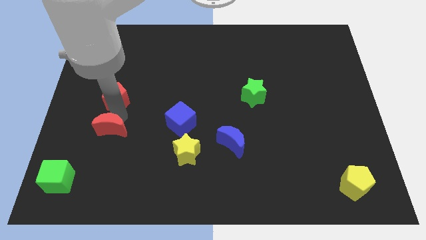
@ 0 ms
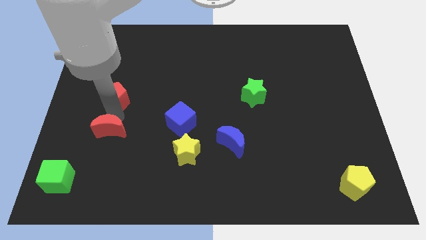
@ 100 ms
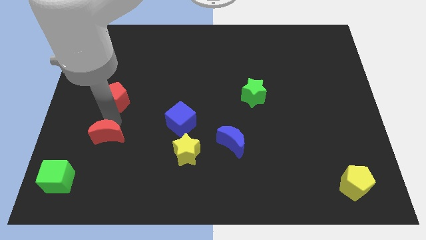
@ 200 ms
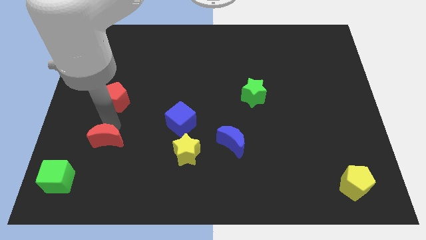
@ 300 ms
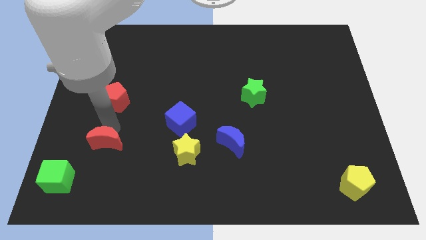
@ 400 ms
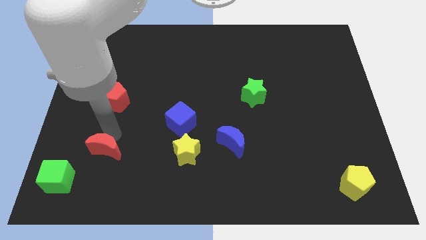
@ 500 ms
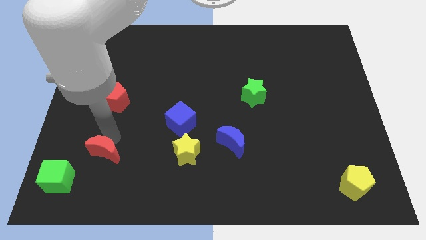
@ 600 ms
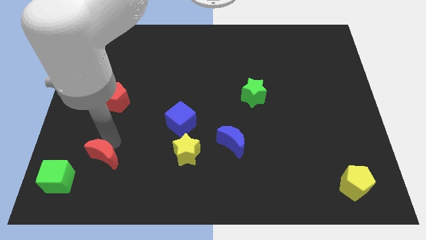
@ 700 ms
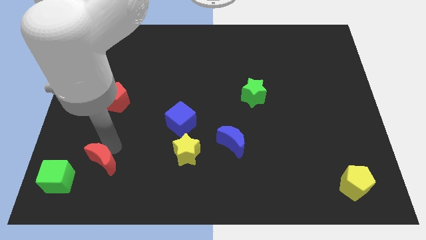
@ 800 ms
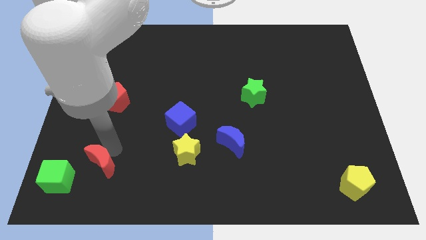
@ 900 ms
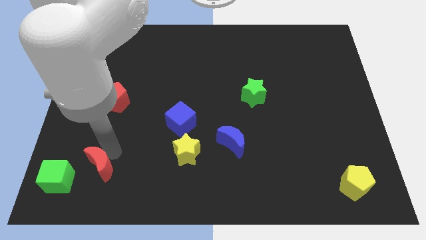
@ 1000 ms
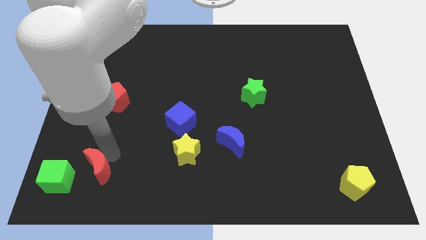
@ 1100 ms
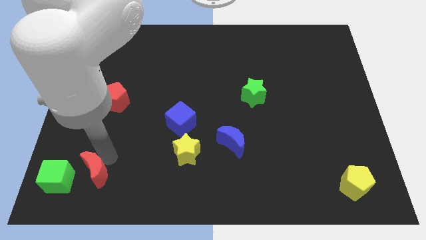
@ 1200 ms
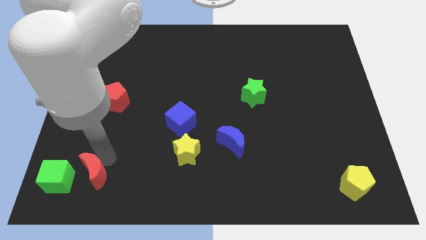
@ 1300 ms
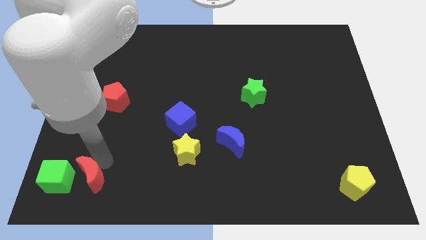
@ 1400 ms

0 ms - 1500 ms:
place red moon to the right of green cube

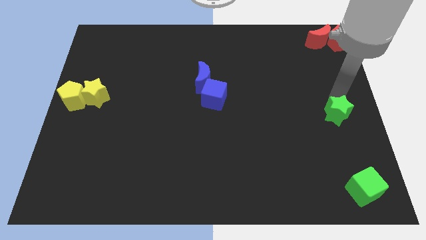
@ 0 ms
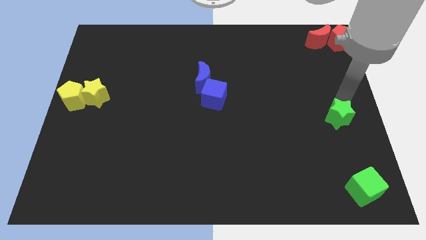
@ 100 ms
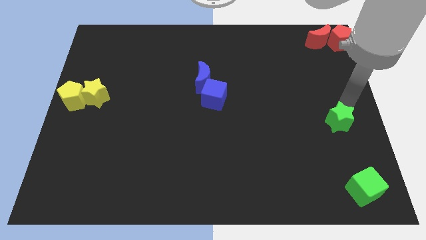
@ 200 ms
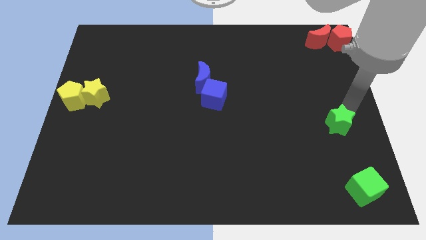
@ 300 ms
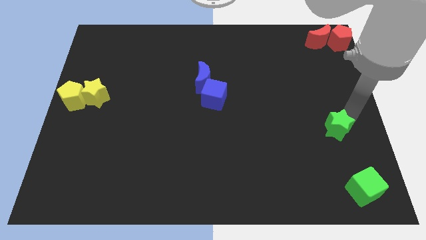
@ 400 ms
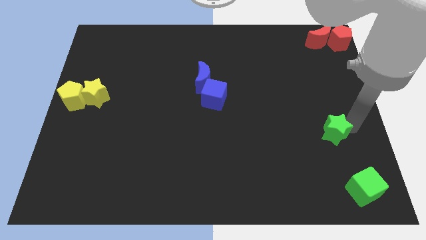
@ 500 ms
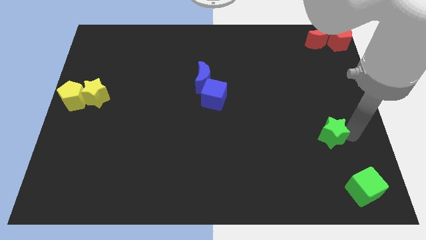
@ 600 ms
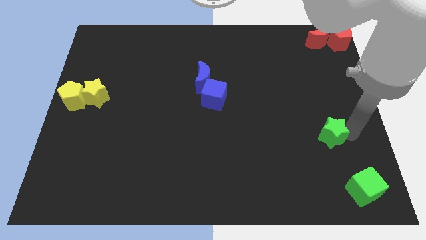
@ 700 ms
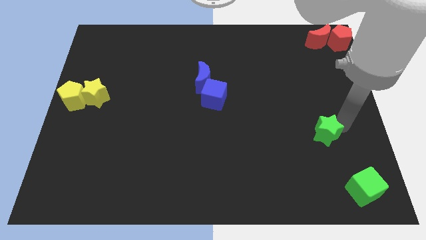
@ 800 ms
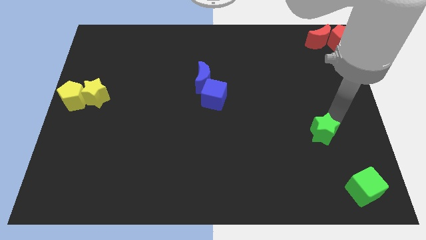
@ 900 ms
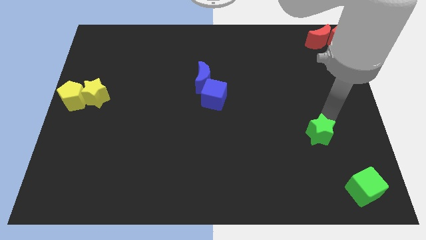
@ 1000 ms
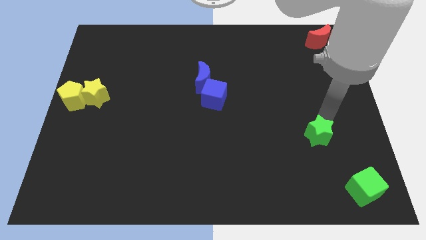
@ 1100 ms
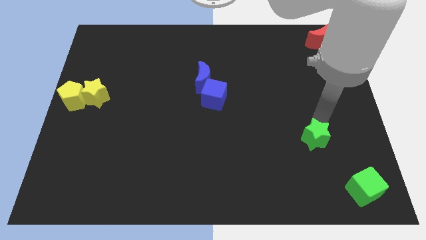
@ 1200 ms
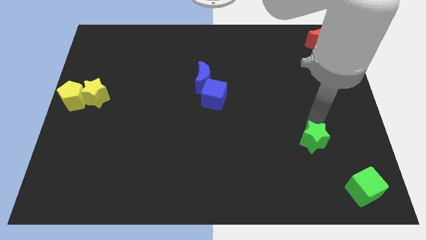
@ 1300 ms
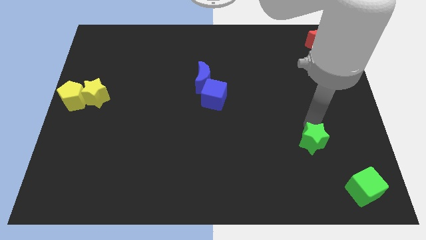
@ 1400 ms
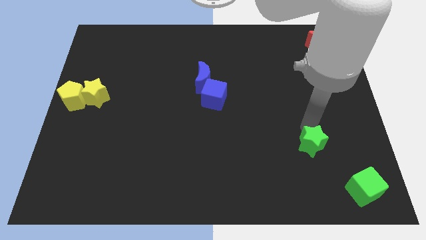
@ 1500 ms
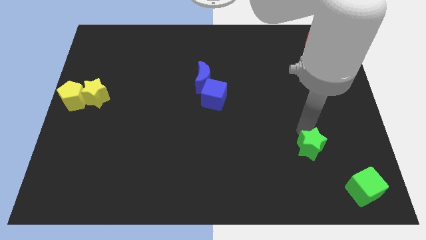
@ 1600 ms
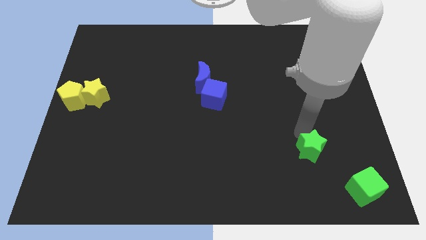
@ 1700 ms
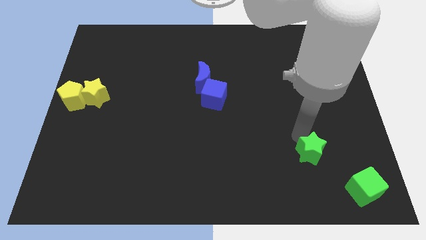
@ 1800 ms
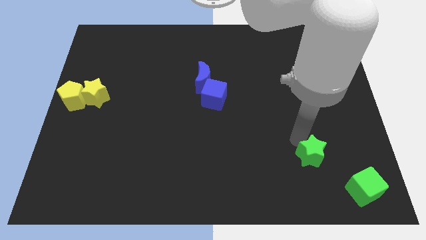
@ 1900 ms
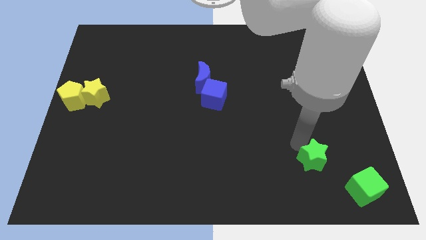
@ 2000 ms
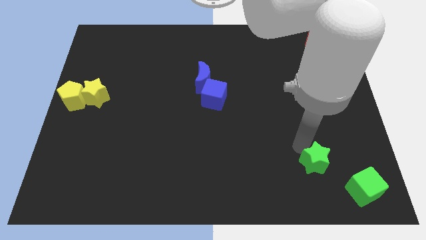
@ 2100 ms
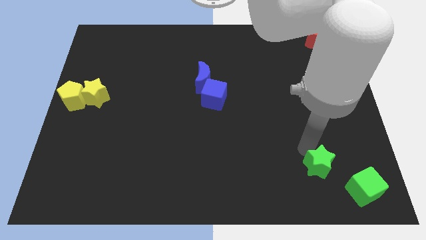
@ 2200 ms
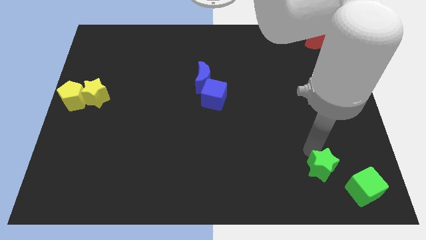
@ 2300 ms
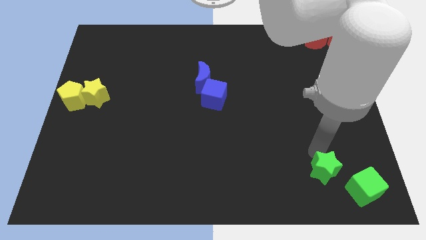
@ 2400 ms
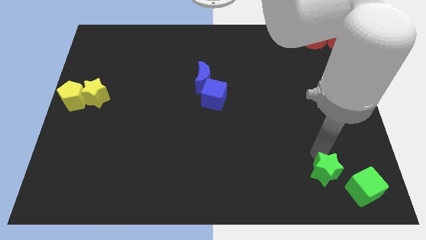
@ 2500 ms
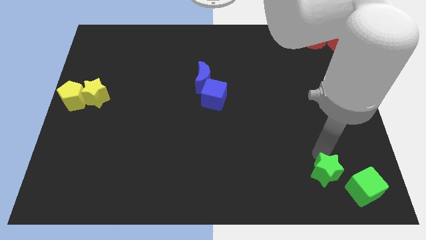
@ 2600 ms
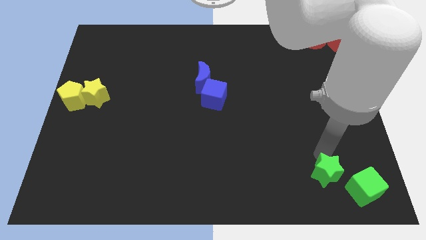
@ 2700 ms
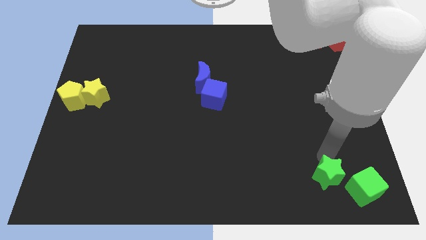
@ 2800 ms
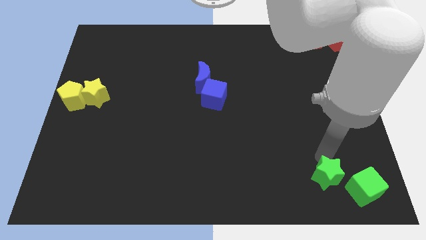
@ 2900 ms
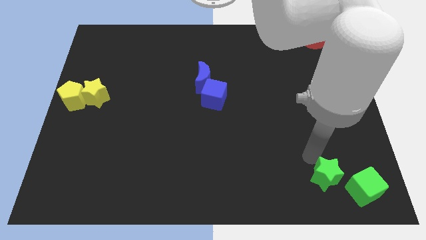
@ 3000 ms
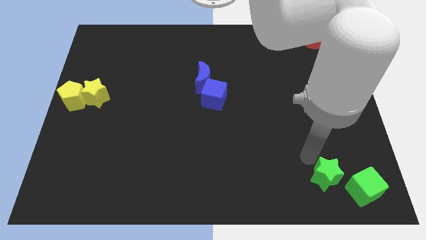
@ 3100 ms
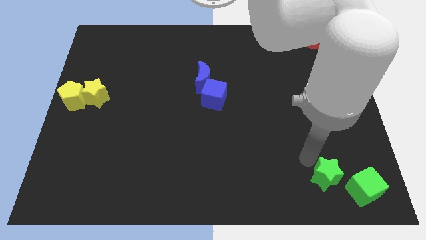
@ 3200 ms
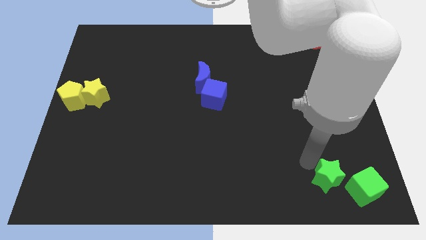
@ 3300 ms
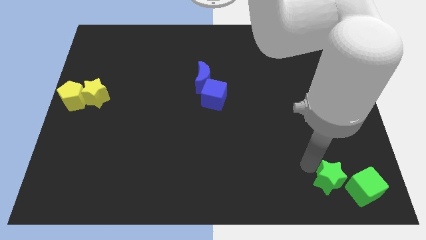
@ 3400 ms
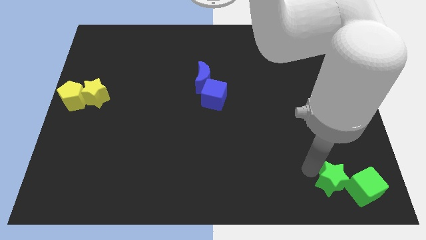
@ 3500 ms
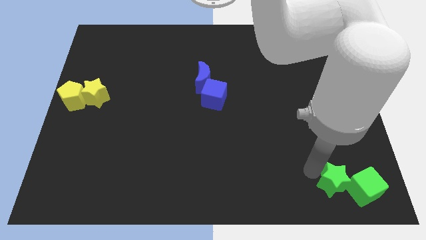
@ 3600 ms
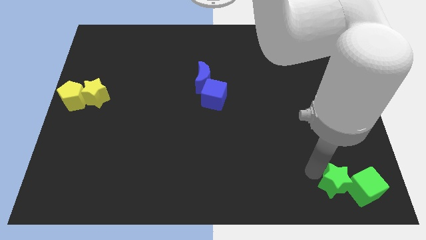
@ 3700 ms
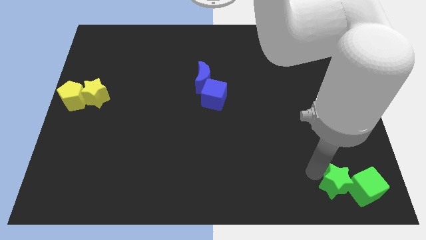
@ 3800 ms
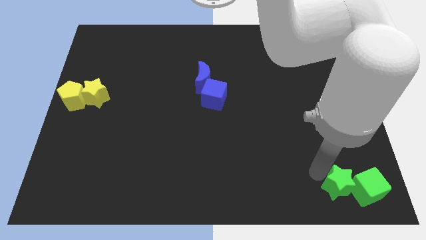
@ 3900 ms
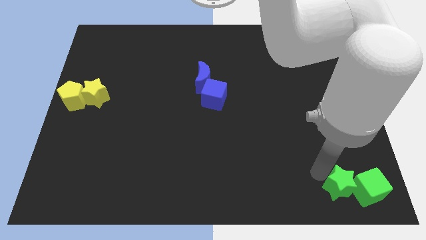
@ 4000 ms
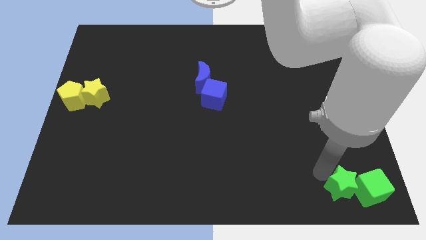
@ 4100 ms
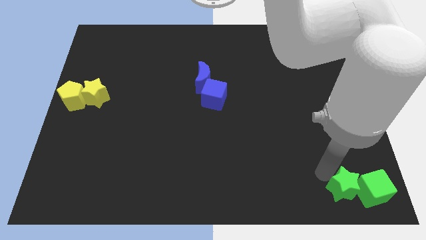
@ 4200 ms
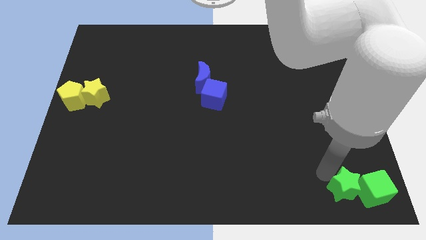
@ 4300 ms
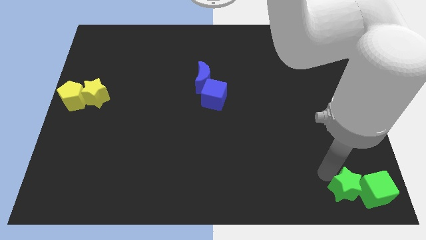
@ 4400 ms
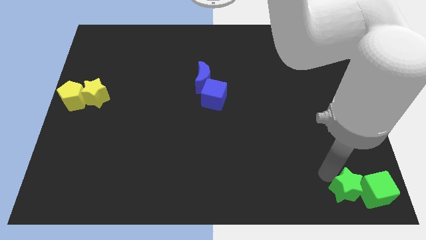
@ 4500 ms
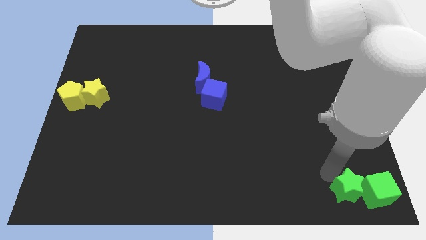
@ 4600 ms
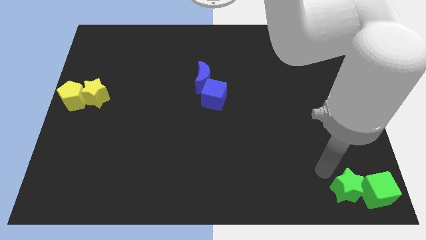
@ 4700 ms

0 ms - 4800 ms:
push the green star to the left of the green cube on the board

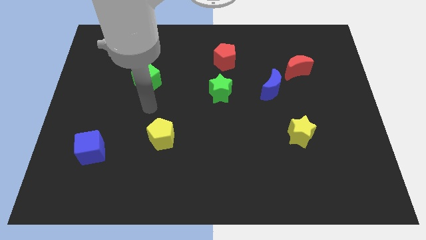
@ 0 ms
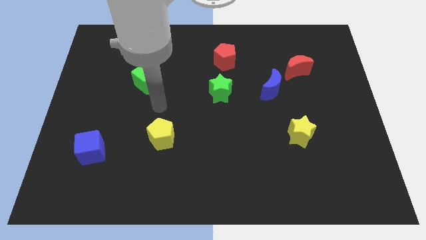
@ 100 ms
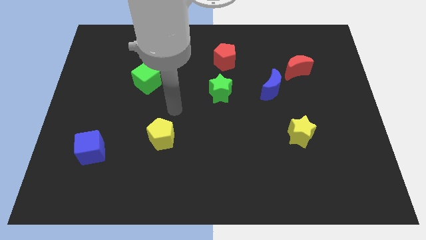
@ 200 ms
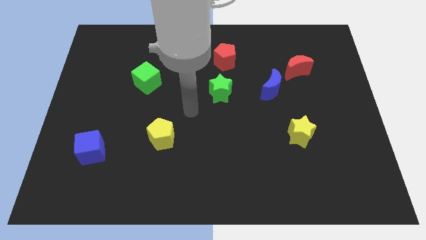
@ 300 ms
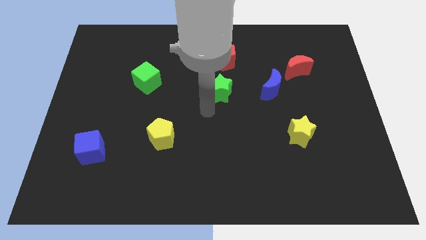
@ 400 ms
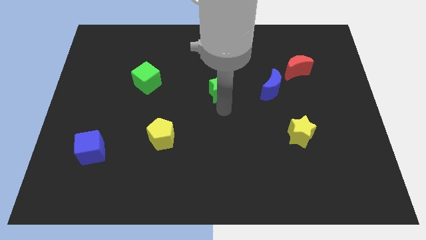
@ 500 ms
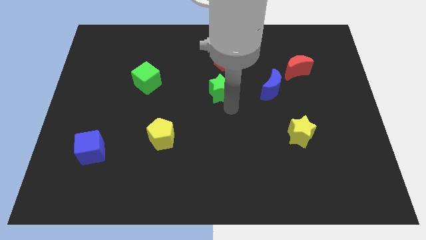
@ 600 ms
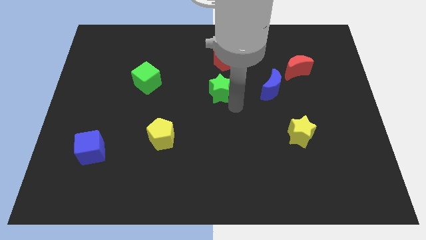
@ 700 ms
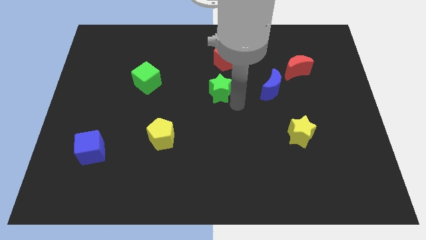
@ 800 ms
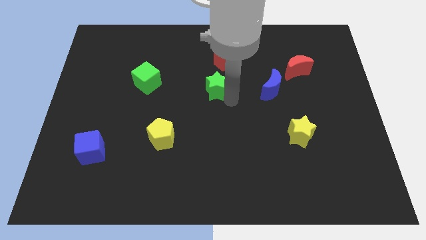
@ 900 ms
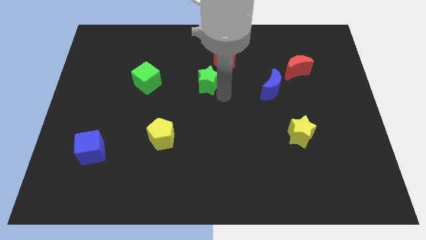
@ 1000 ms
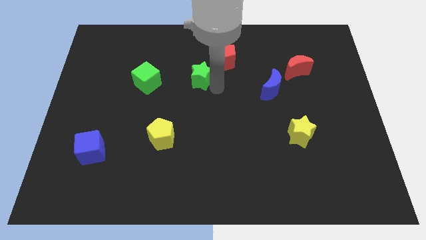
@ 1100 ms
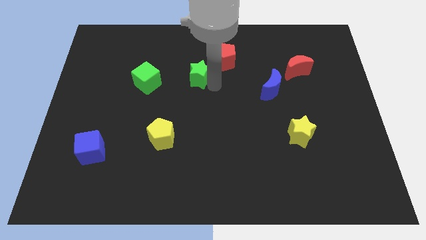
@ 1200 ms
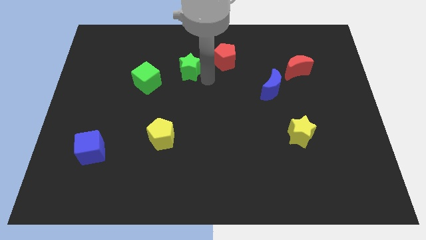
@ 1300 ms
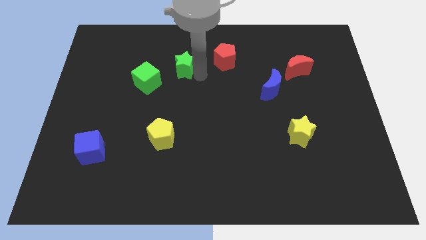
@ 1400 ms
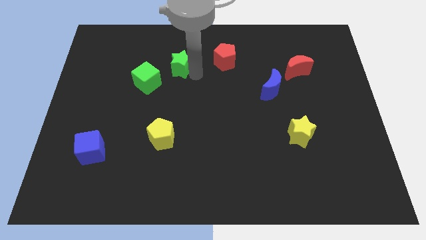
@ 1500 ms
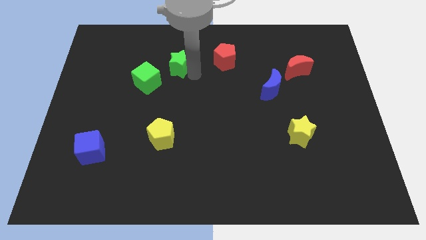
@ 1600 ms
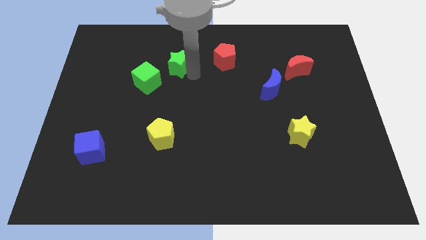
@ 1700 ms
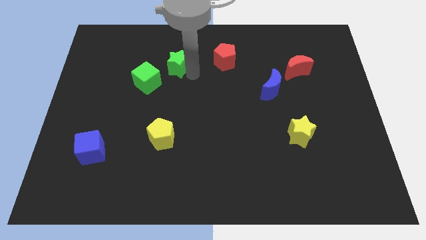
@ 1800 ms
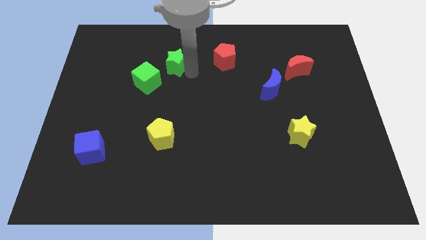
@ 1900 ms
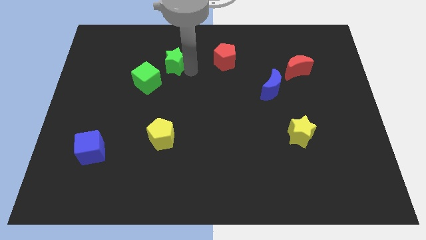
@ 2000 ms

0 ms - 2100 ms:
place green star on the right side of the green cube

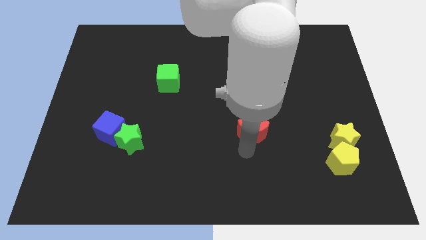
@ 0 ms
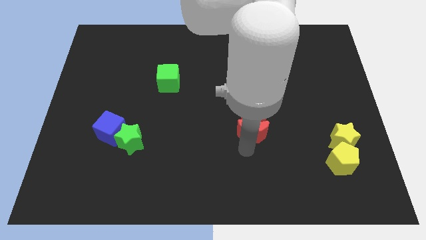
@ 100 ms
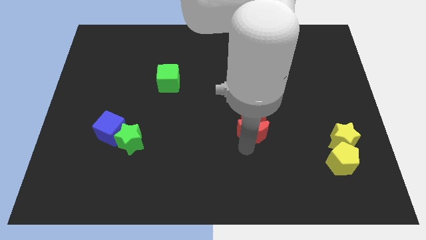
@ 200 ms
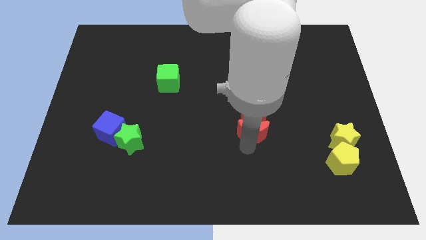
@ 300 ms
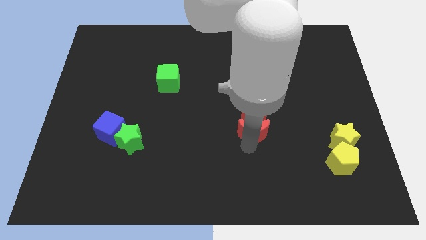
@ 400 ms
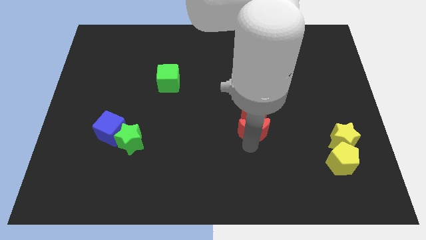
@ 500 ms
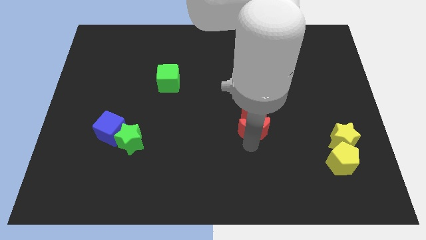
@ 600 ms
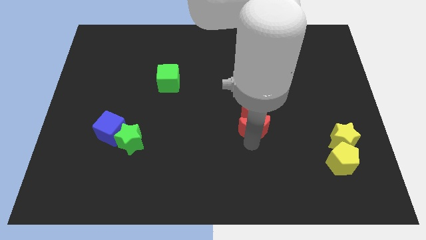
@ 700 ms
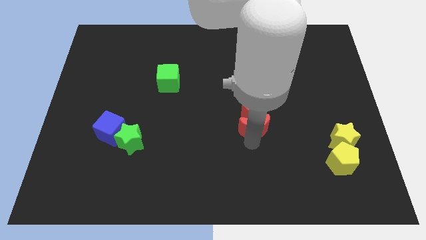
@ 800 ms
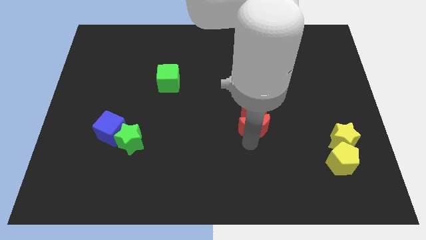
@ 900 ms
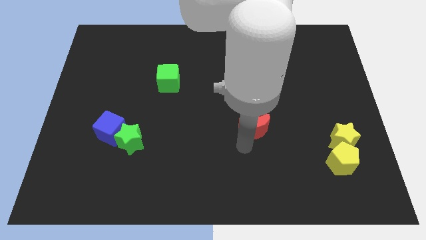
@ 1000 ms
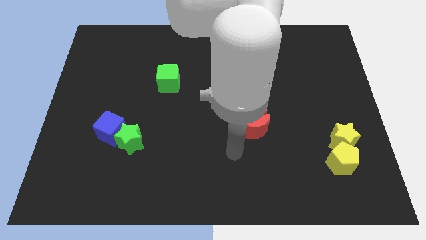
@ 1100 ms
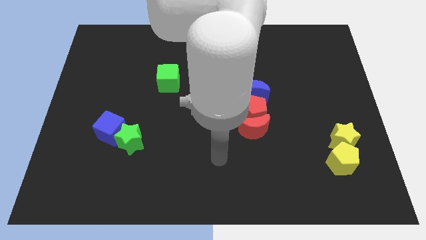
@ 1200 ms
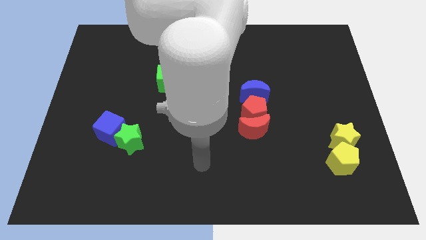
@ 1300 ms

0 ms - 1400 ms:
move the red blocks slightly up
